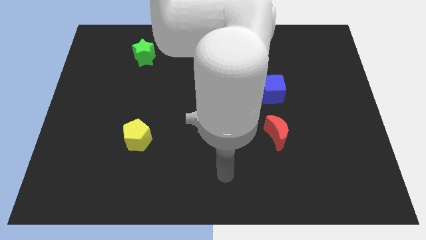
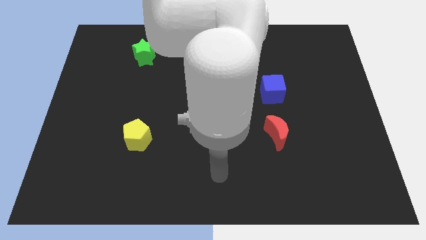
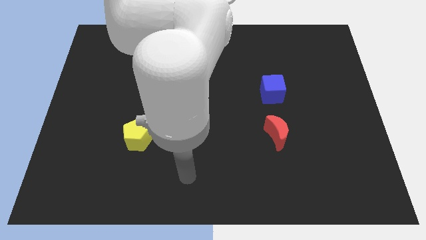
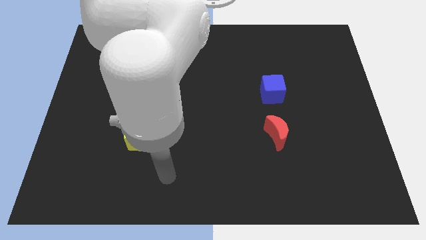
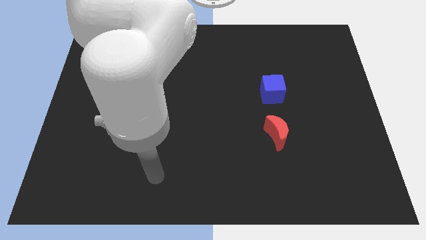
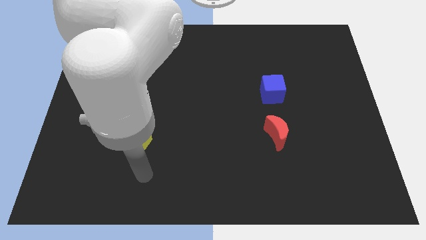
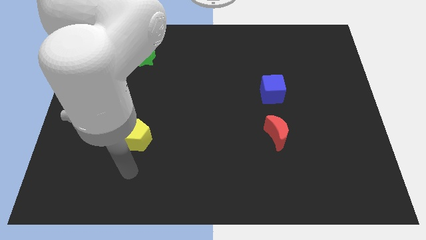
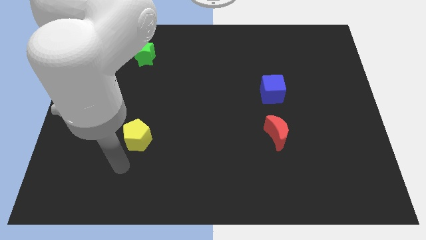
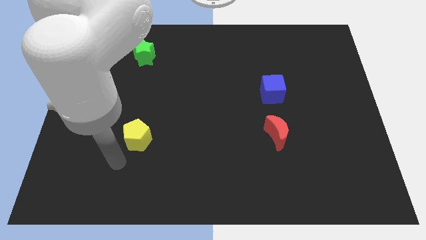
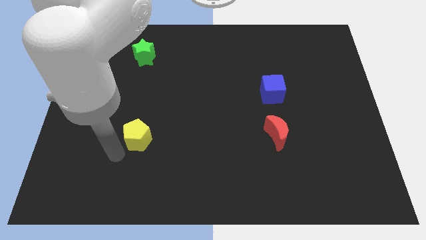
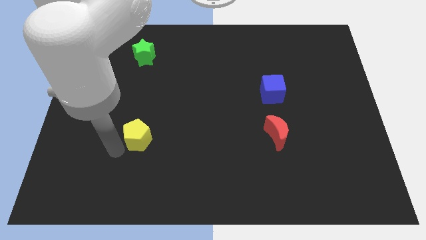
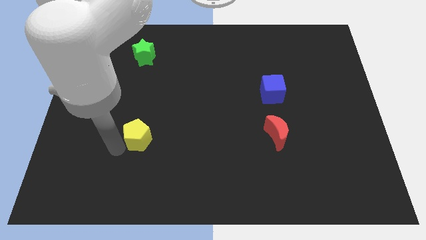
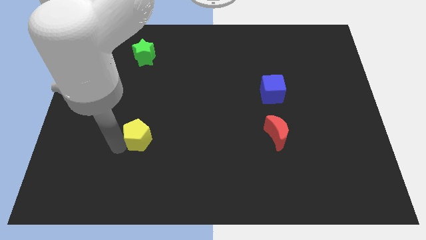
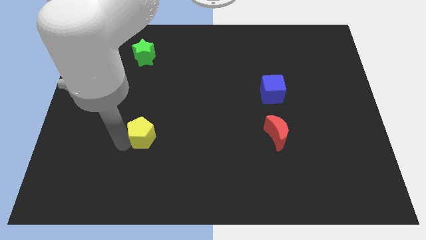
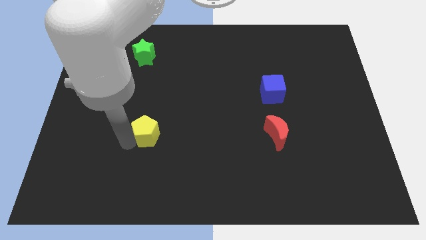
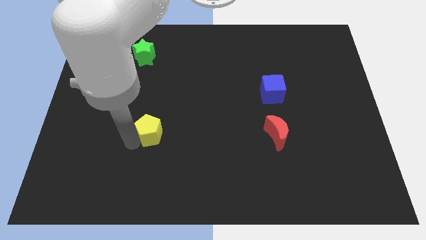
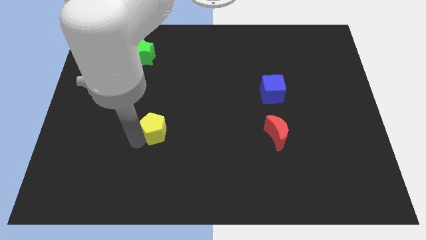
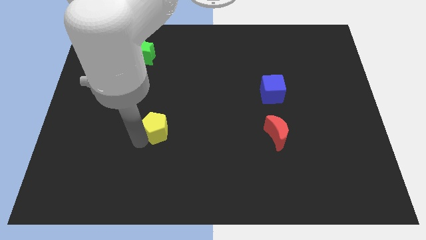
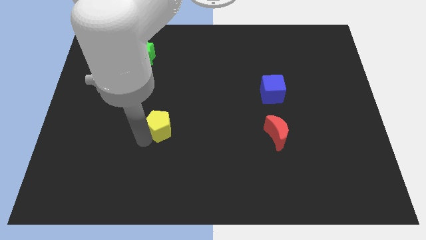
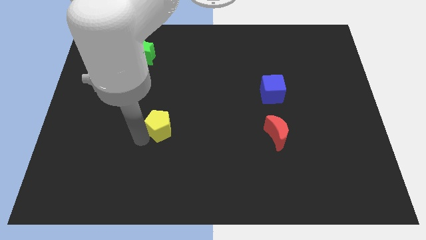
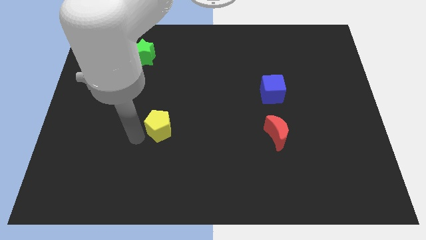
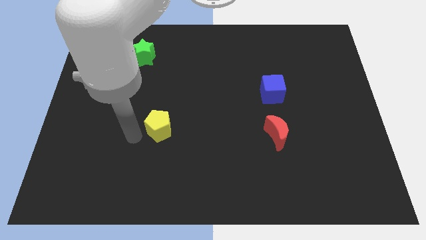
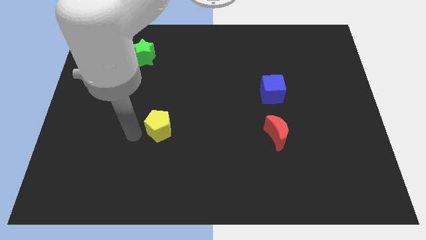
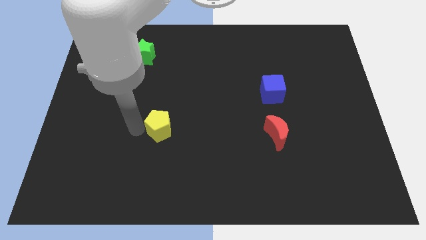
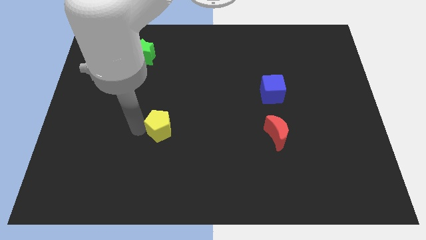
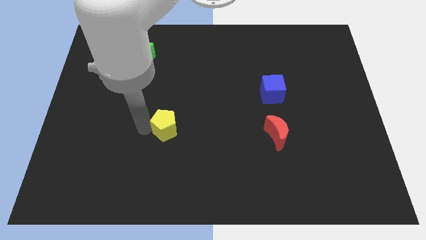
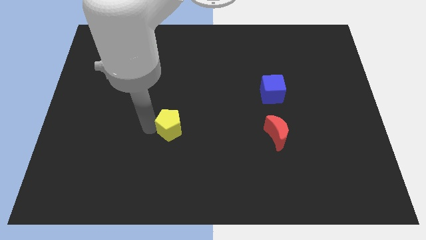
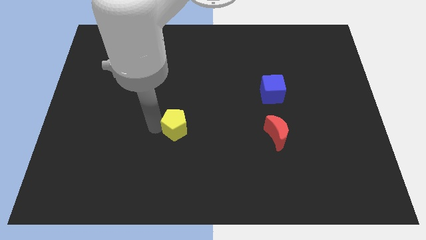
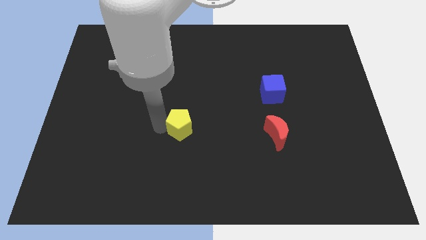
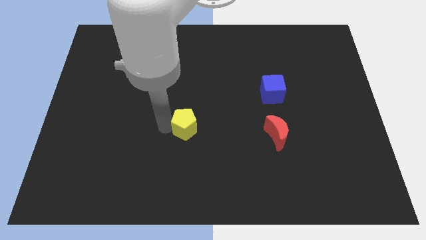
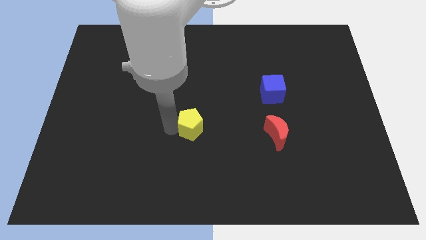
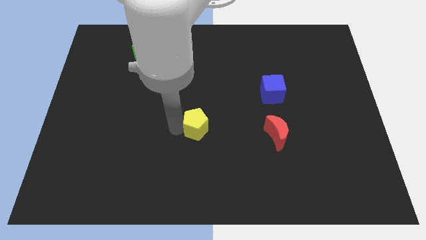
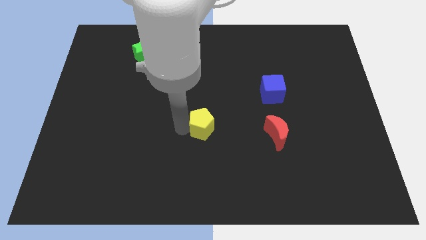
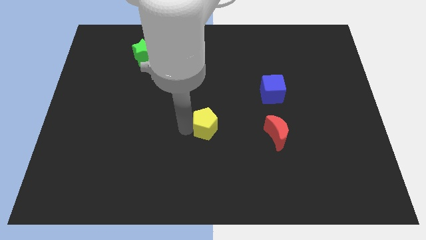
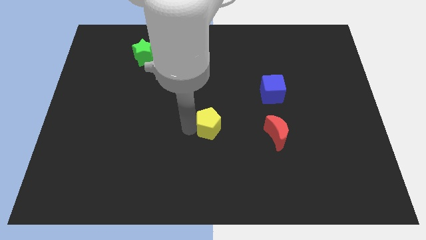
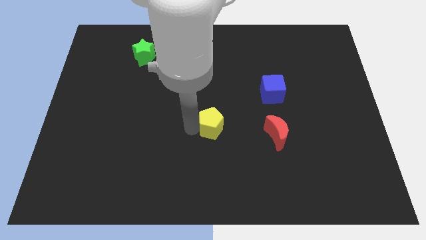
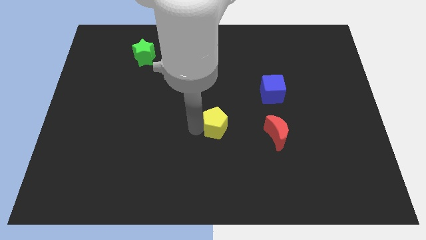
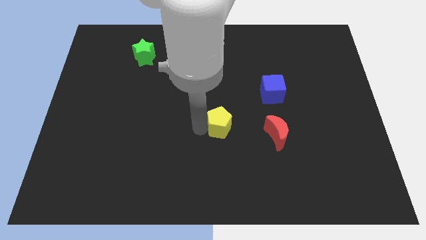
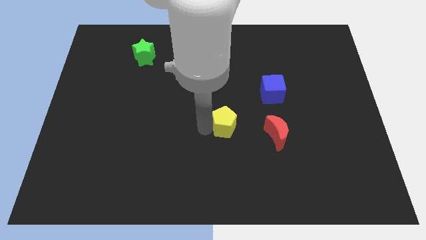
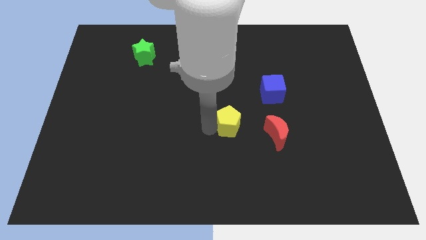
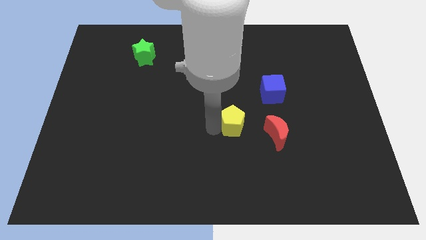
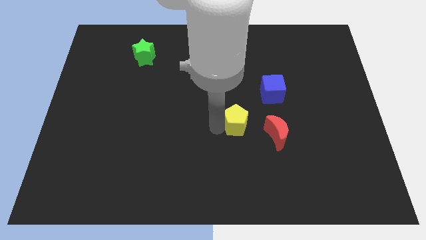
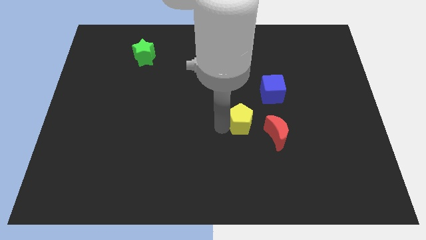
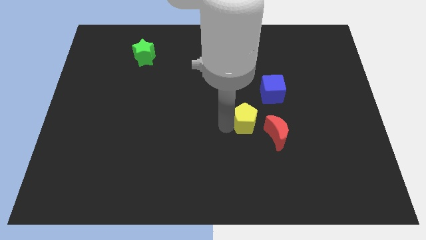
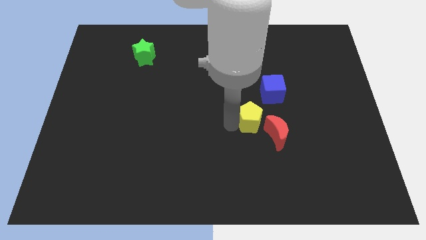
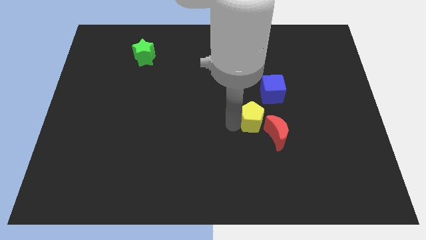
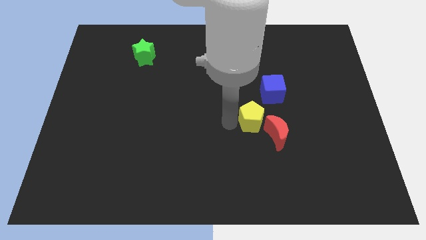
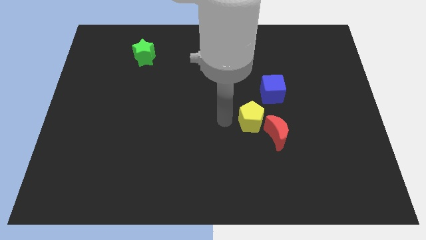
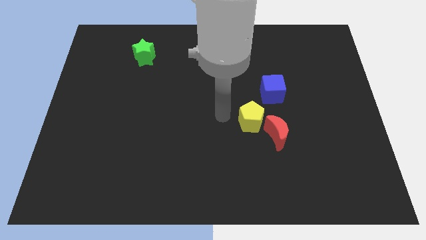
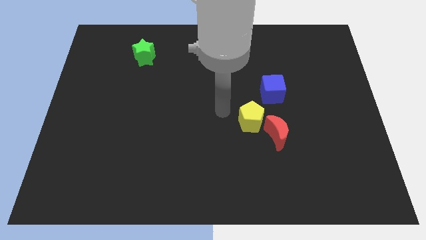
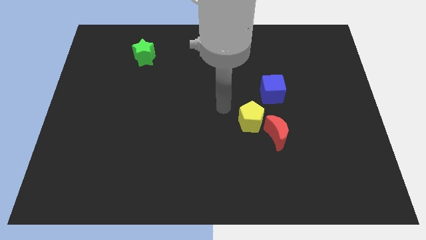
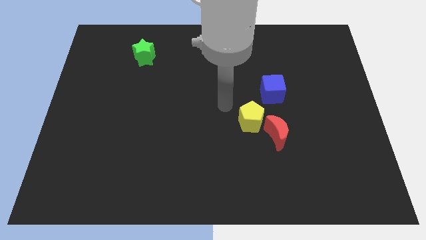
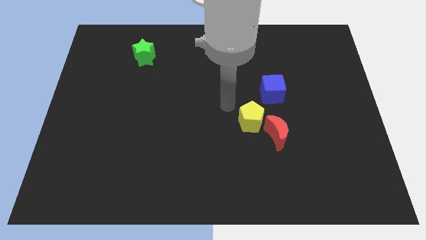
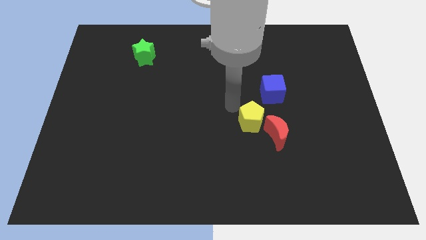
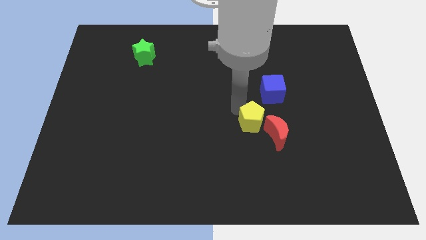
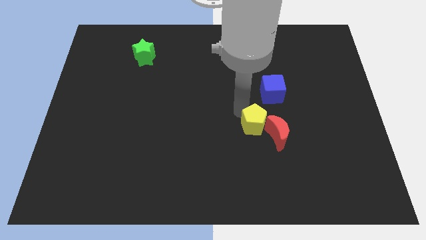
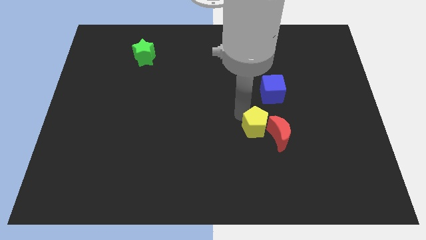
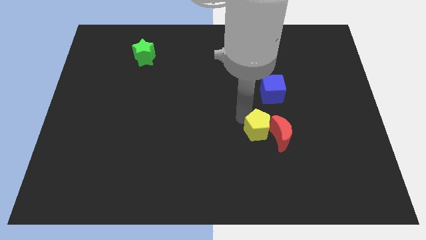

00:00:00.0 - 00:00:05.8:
push the yellow block next to the red block

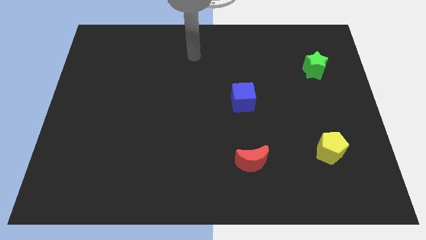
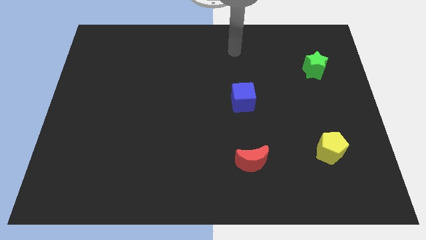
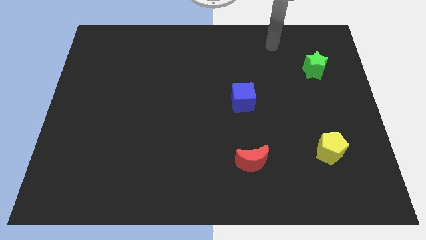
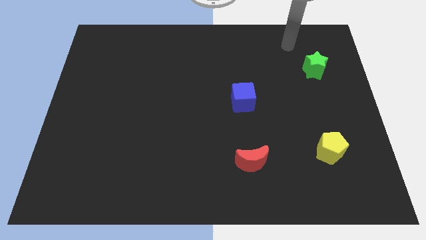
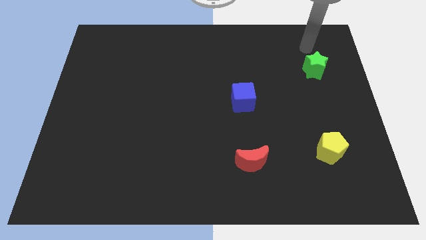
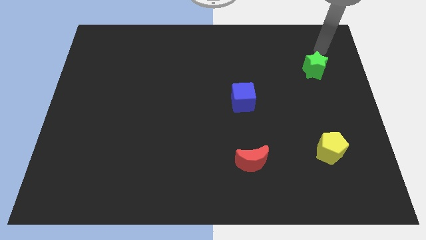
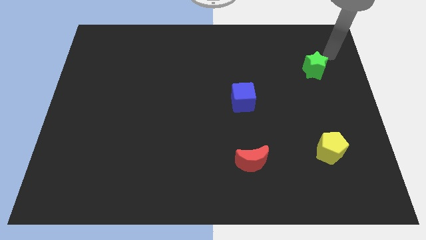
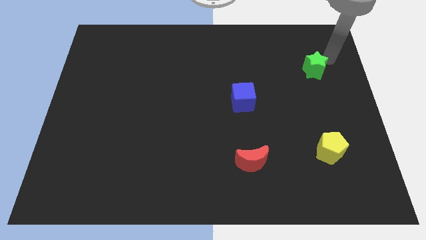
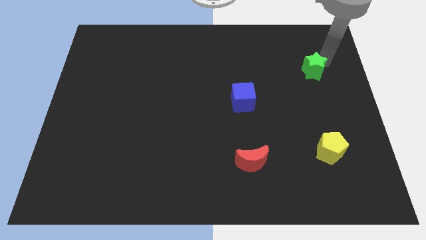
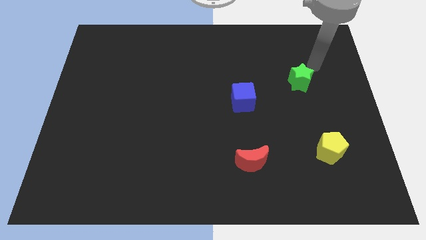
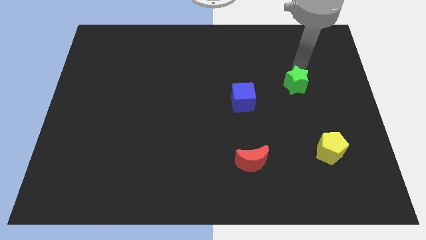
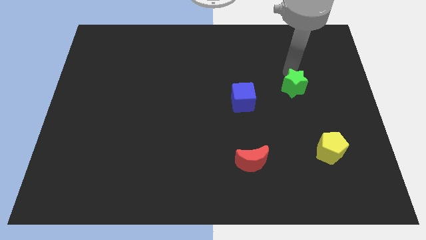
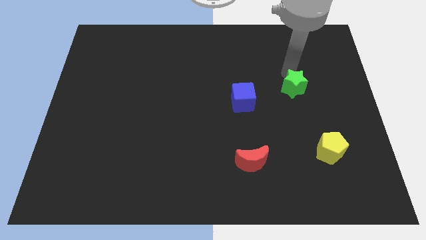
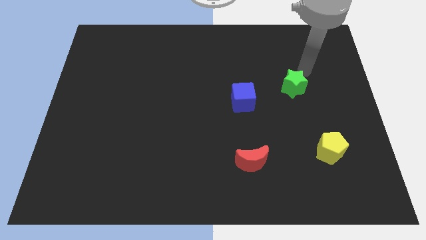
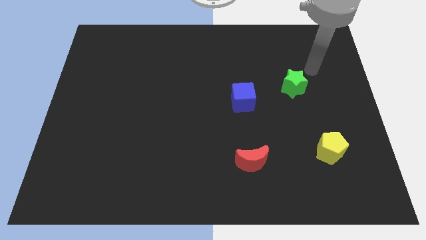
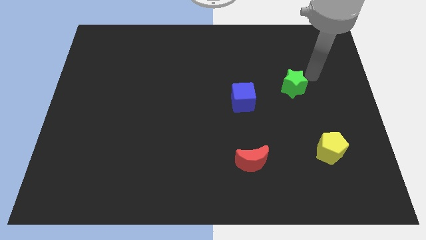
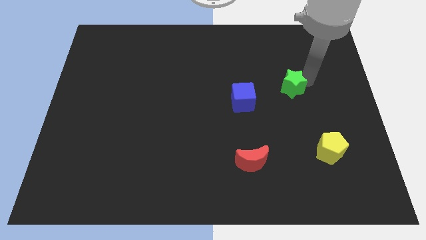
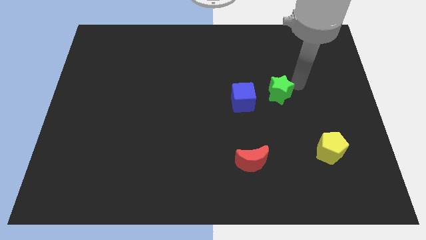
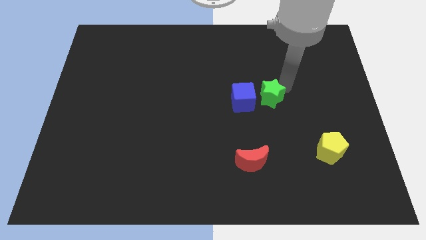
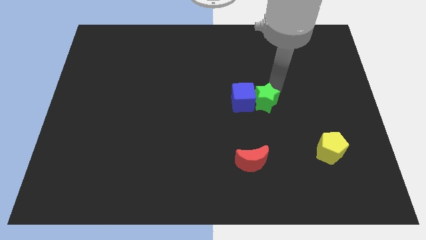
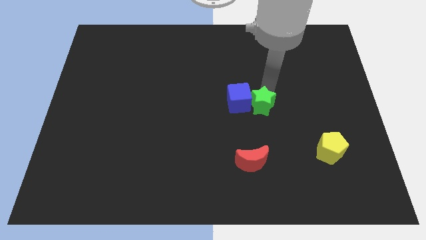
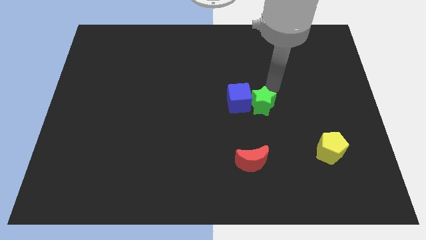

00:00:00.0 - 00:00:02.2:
put the star towards the blue cube

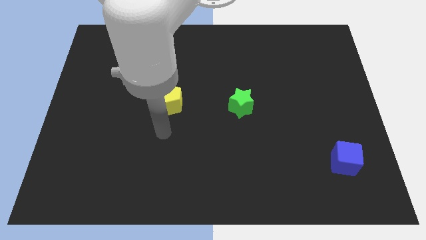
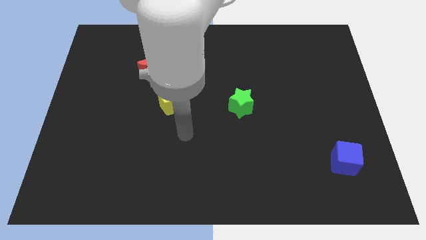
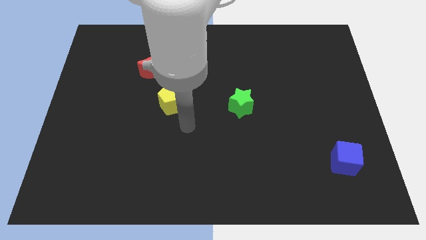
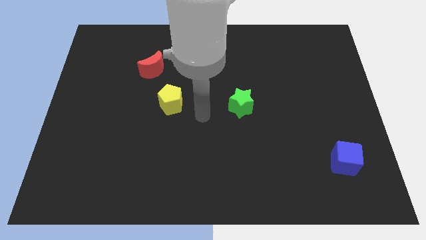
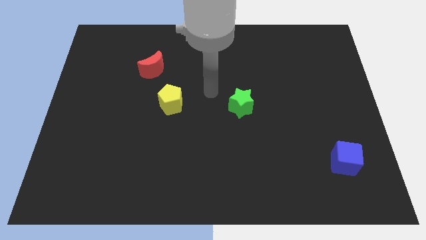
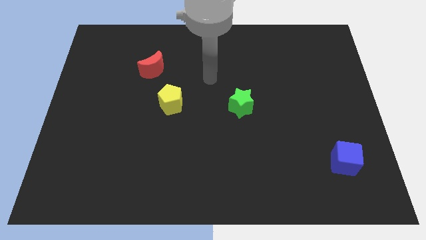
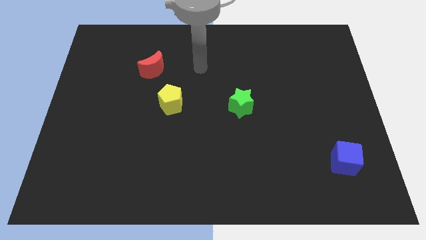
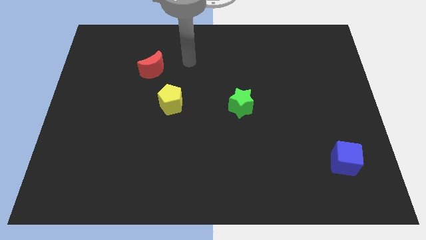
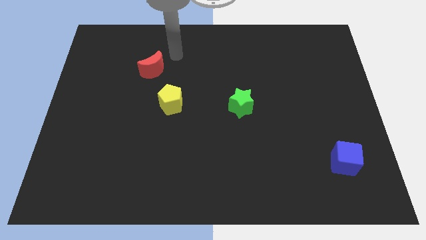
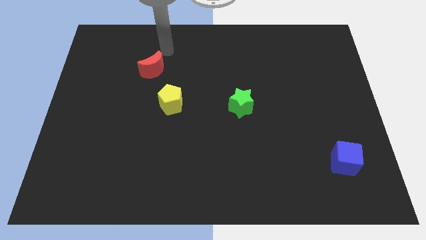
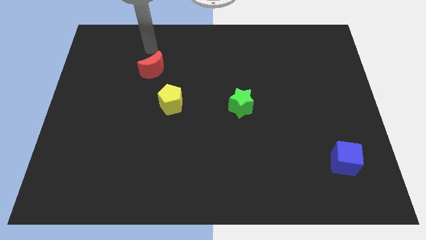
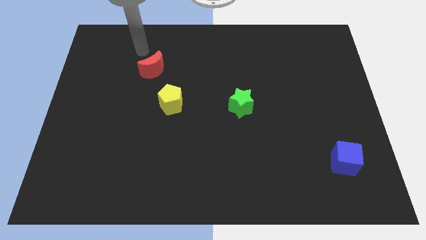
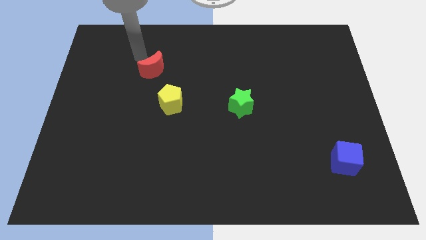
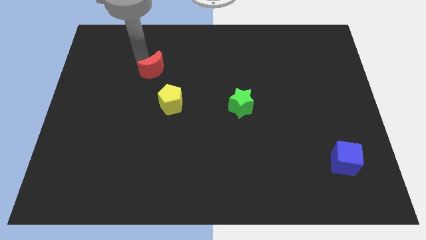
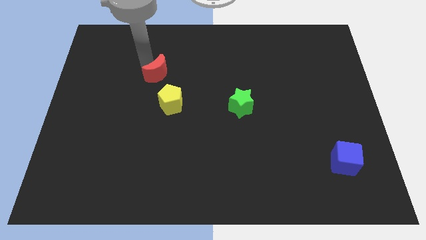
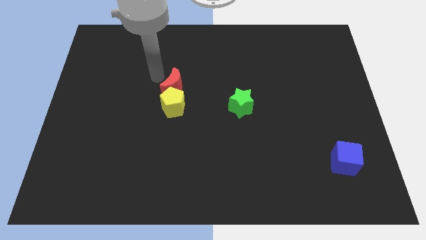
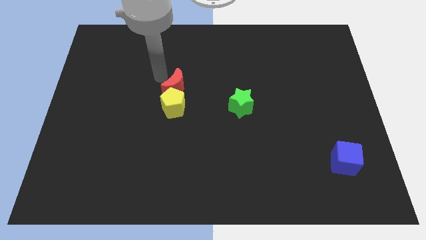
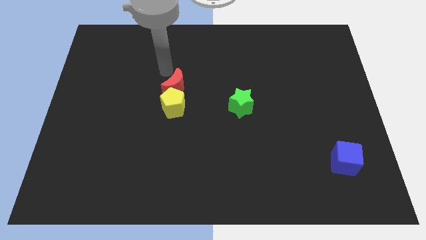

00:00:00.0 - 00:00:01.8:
slide the moon next to the pentagon
